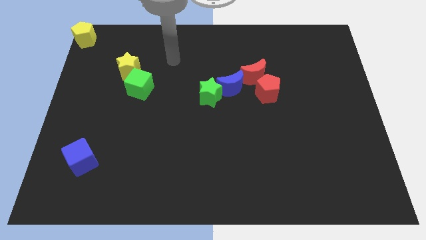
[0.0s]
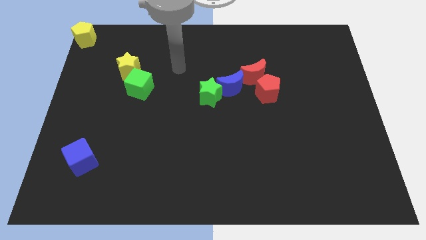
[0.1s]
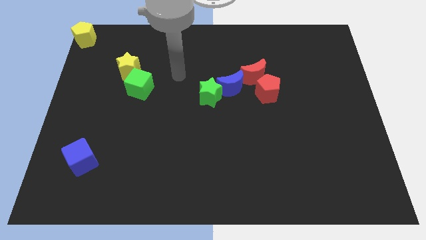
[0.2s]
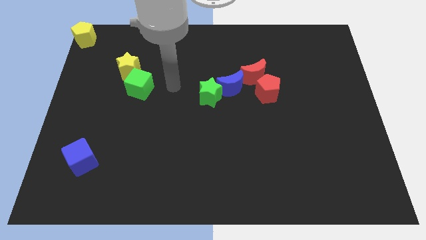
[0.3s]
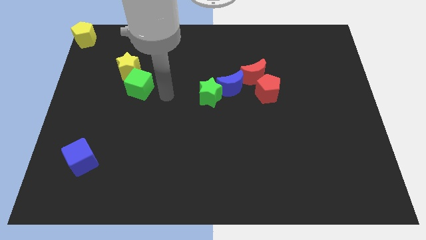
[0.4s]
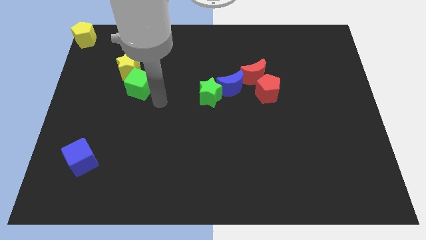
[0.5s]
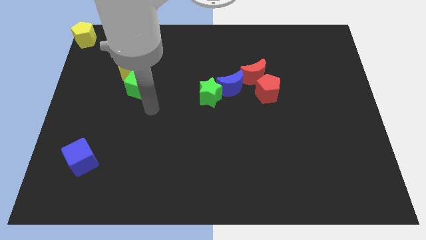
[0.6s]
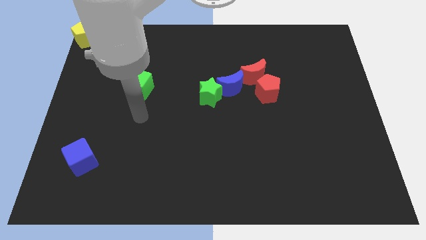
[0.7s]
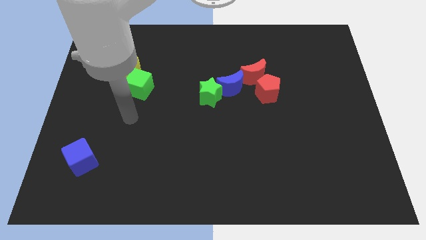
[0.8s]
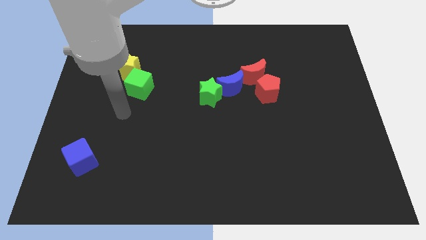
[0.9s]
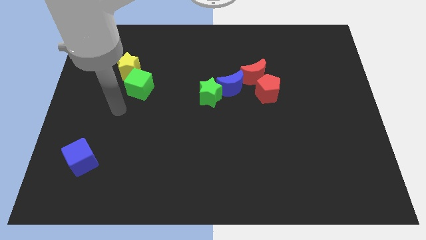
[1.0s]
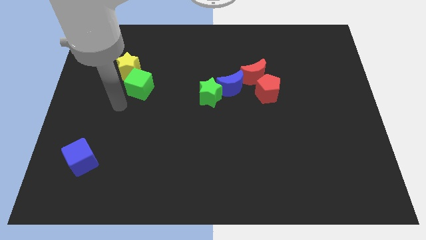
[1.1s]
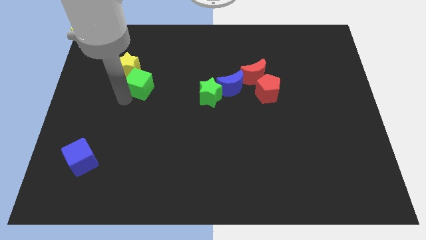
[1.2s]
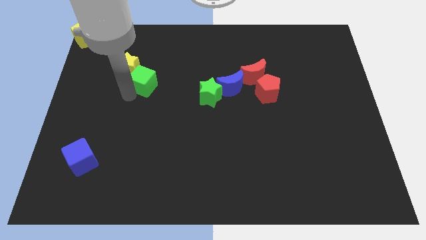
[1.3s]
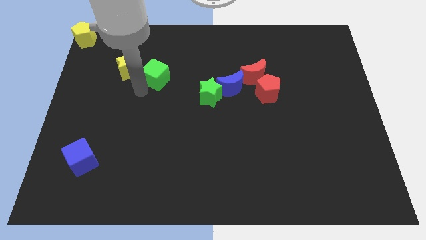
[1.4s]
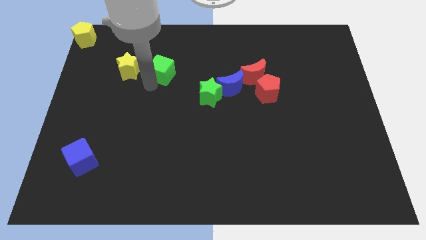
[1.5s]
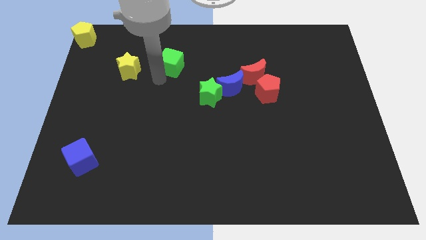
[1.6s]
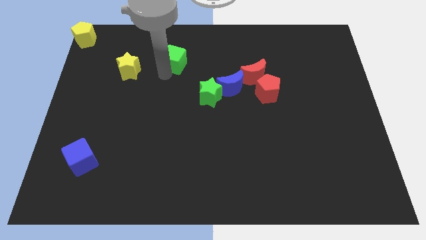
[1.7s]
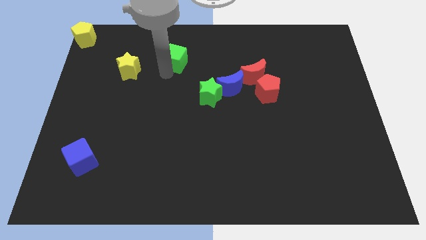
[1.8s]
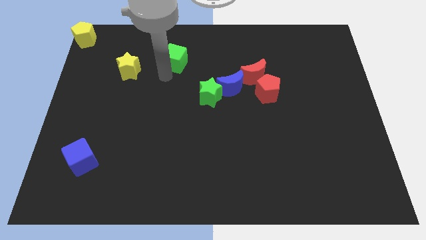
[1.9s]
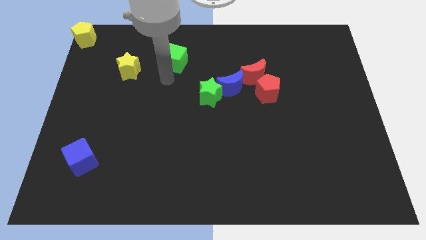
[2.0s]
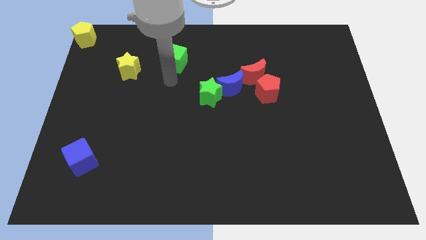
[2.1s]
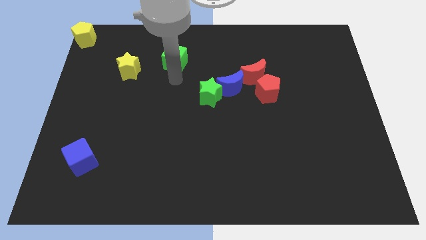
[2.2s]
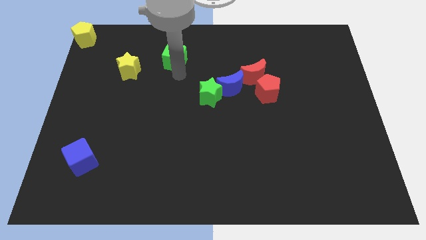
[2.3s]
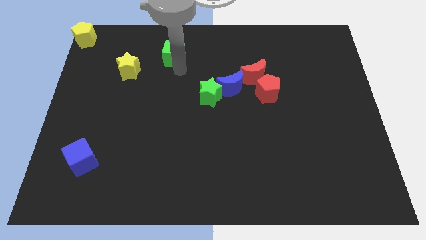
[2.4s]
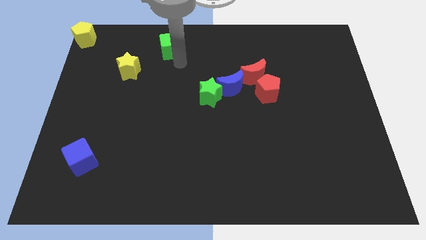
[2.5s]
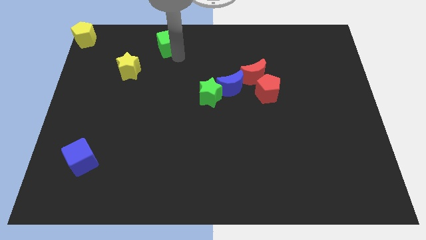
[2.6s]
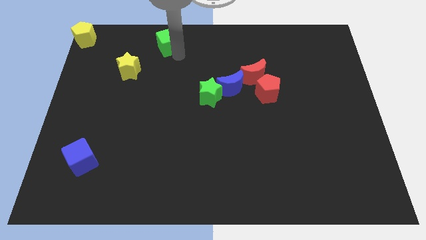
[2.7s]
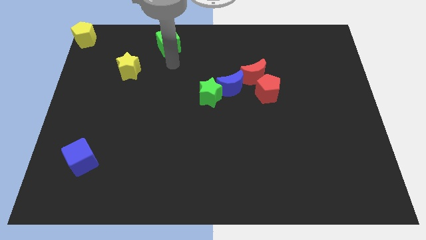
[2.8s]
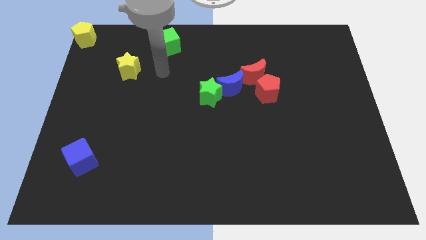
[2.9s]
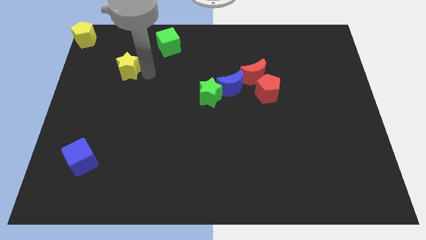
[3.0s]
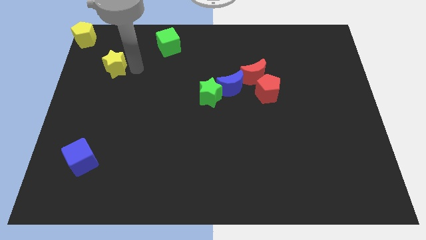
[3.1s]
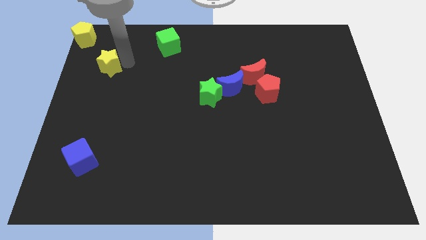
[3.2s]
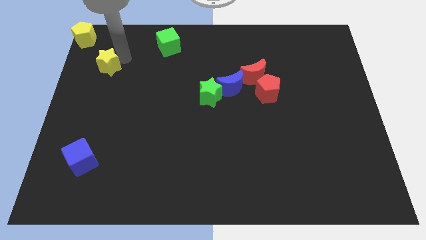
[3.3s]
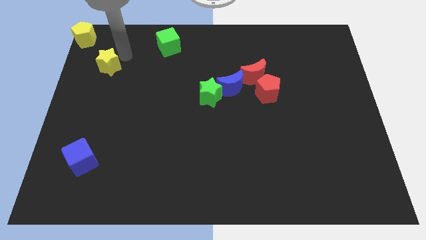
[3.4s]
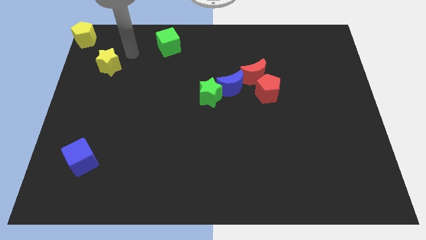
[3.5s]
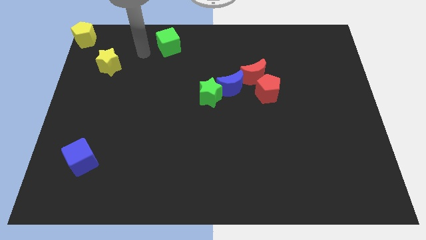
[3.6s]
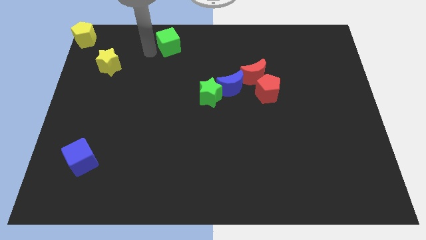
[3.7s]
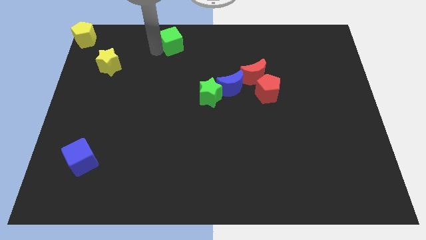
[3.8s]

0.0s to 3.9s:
slightly push the green cube towards the top center of the board

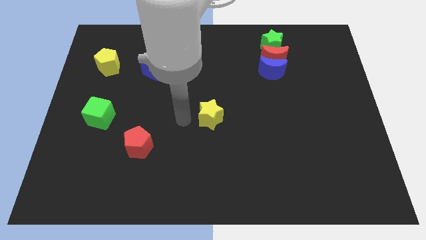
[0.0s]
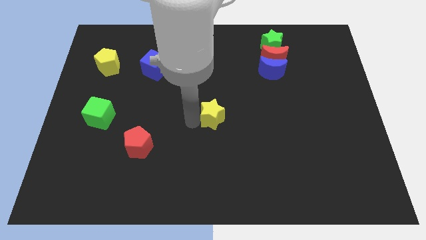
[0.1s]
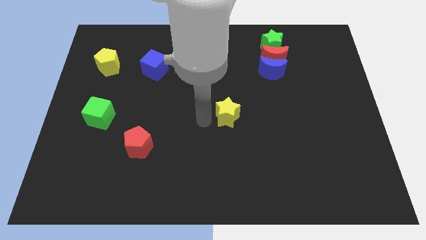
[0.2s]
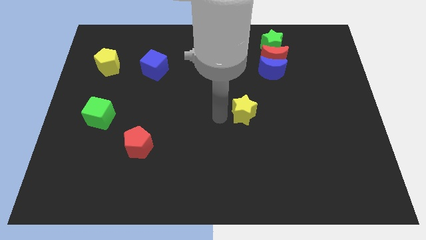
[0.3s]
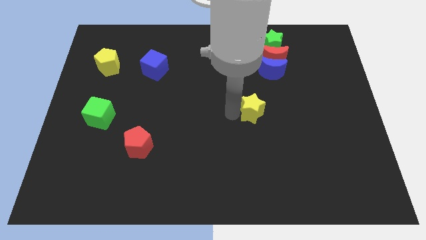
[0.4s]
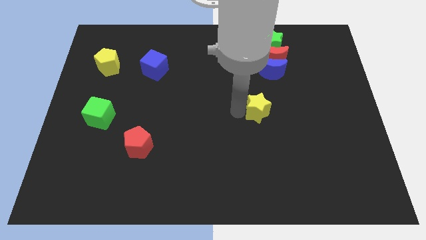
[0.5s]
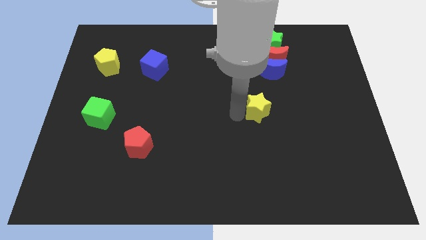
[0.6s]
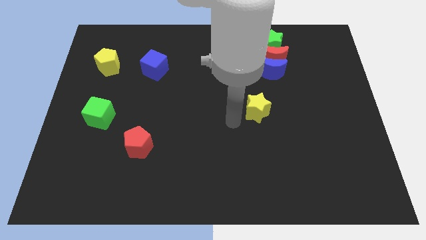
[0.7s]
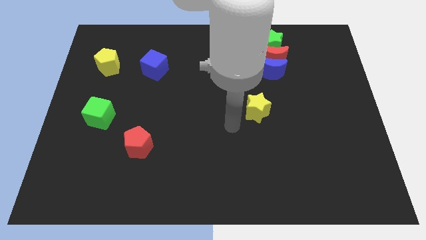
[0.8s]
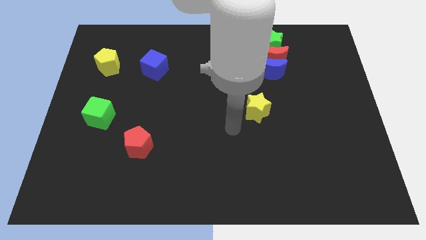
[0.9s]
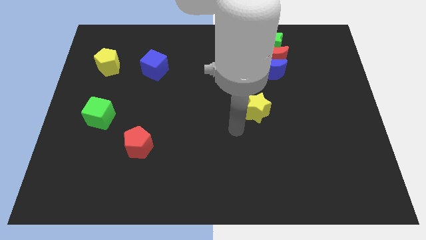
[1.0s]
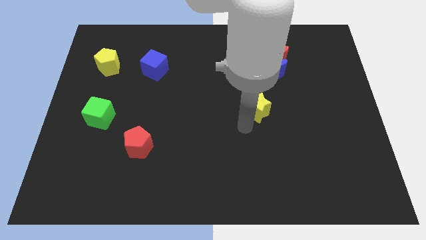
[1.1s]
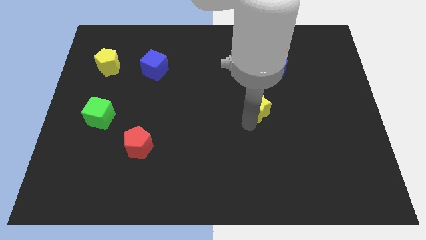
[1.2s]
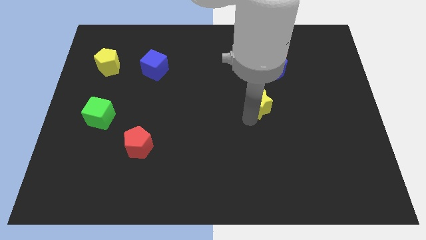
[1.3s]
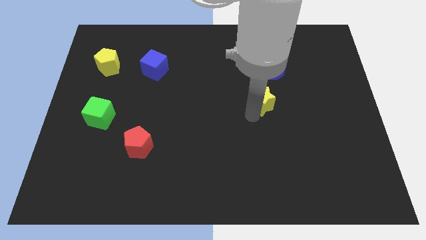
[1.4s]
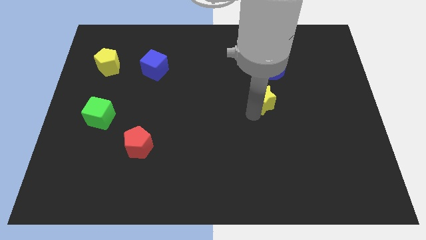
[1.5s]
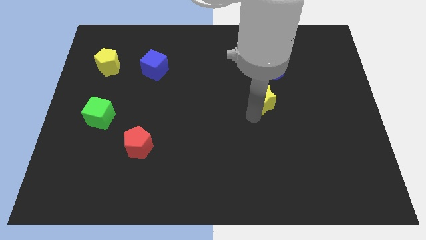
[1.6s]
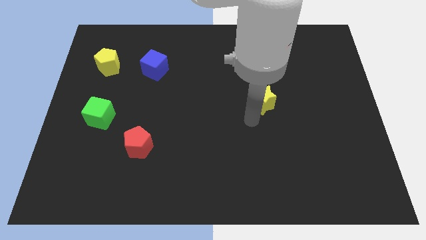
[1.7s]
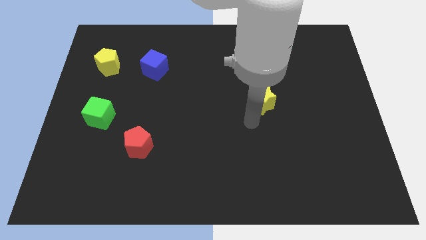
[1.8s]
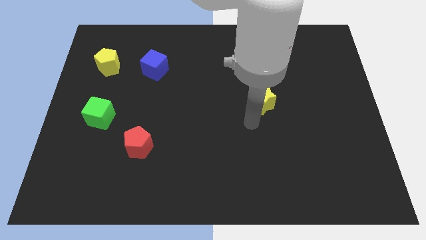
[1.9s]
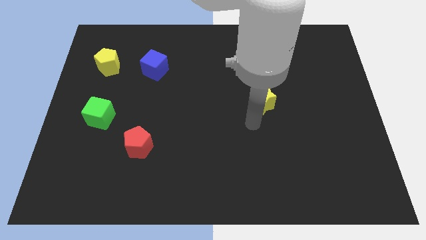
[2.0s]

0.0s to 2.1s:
push the yellow star below the blue crescent

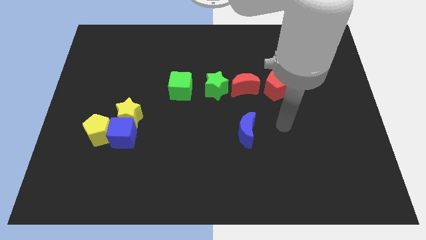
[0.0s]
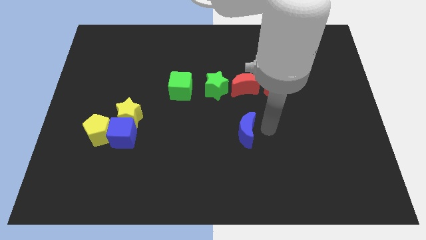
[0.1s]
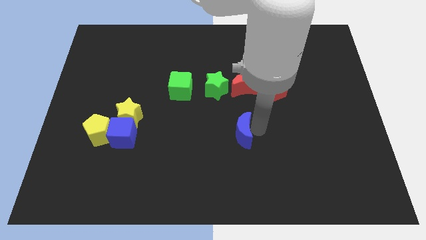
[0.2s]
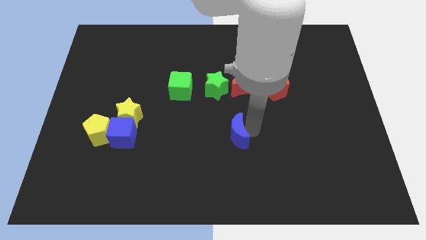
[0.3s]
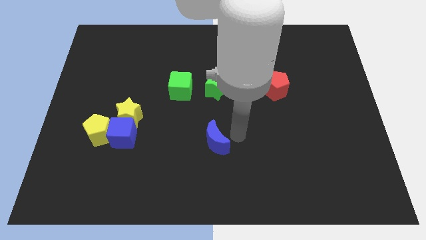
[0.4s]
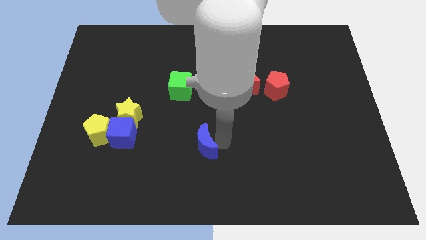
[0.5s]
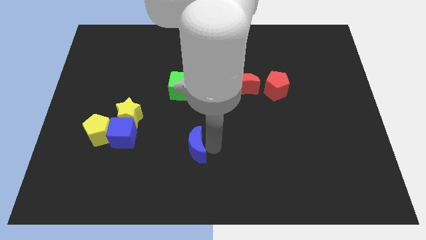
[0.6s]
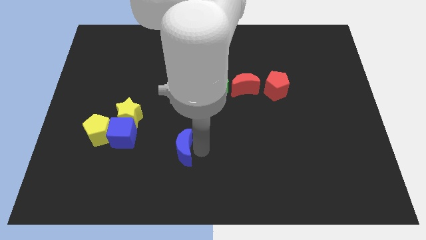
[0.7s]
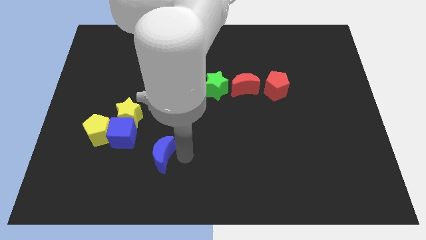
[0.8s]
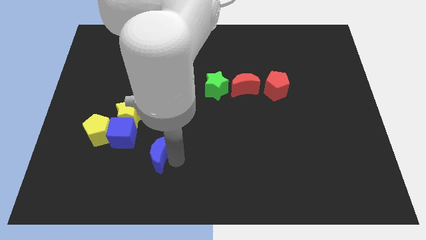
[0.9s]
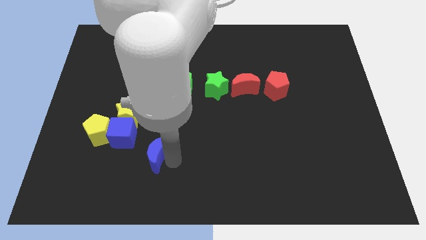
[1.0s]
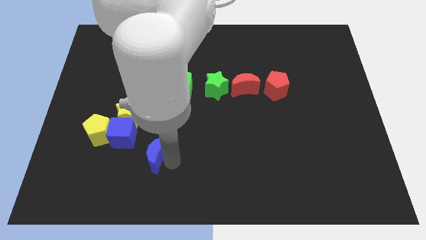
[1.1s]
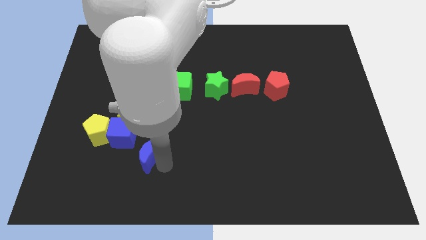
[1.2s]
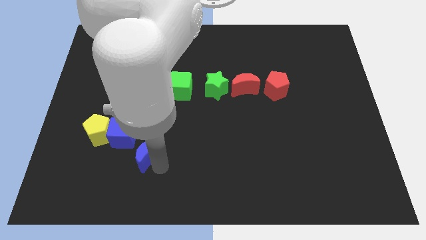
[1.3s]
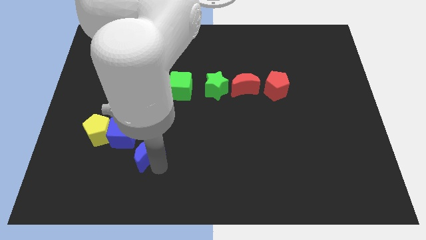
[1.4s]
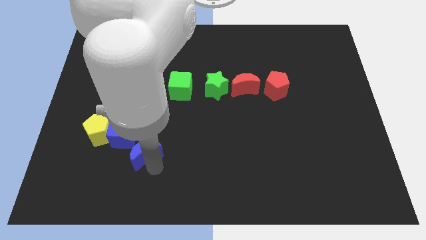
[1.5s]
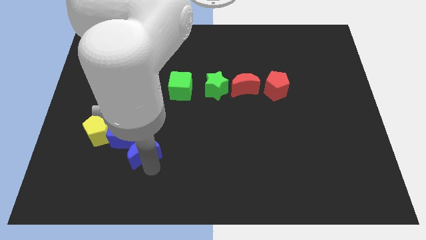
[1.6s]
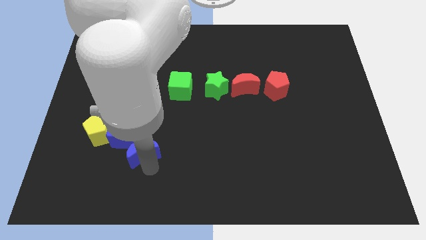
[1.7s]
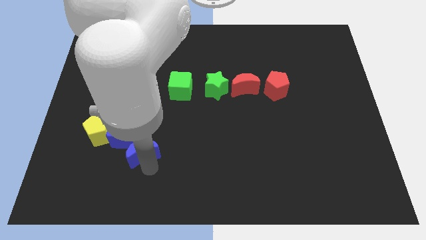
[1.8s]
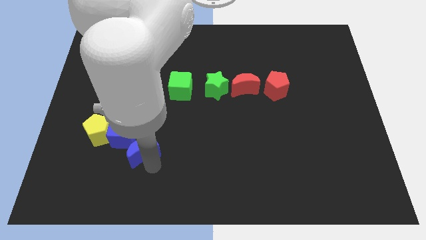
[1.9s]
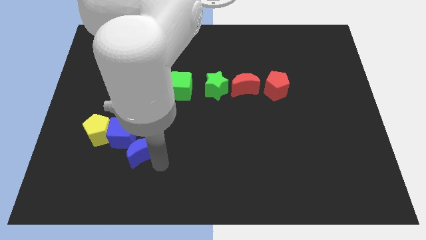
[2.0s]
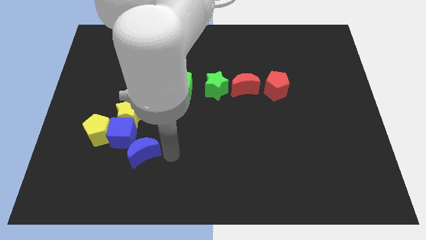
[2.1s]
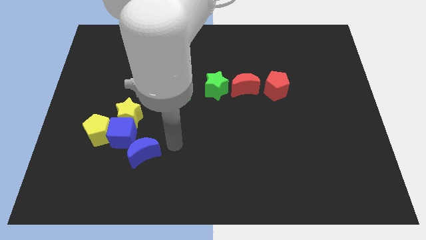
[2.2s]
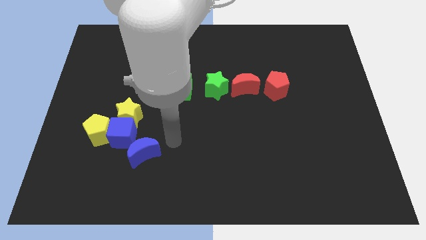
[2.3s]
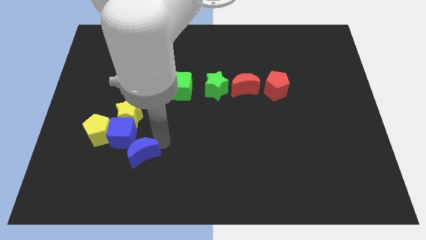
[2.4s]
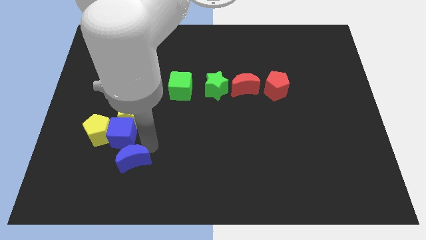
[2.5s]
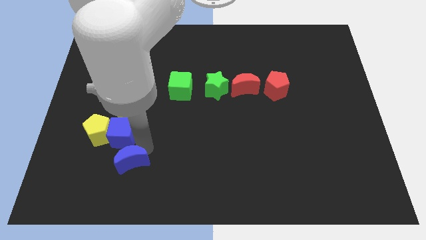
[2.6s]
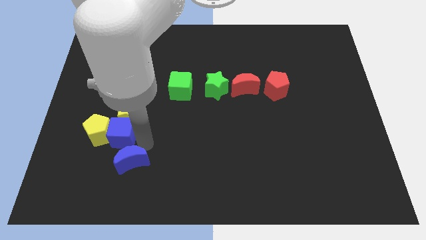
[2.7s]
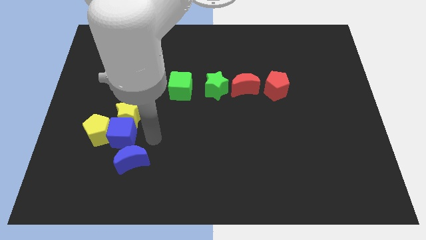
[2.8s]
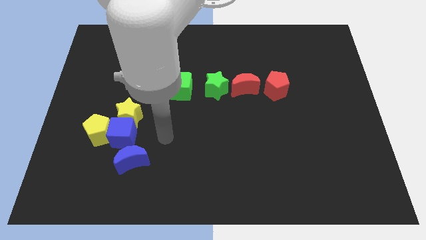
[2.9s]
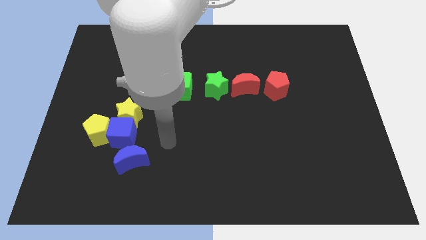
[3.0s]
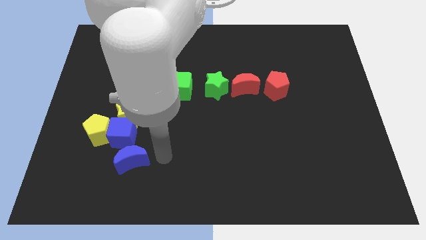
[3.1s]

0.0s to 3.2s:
drag the blue moon diagonally bottom left to the green cube
